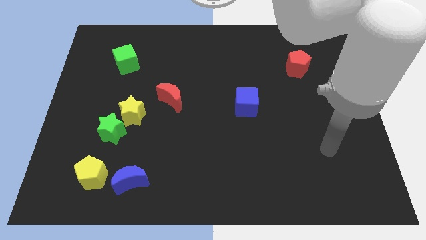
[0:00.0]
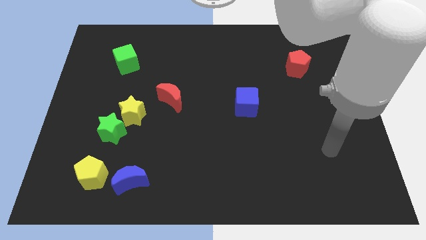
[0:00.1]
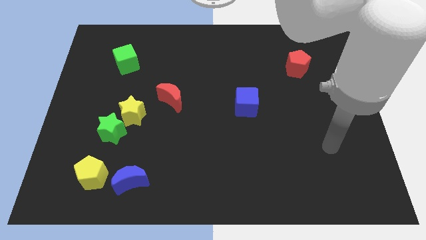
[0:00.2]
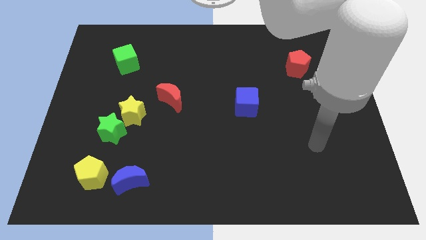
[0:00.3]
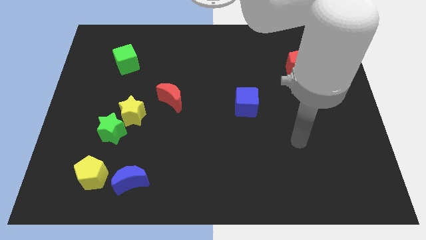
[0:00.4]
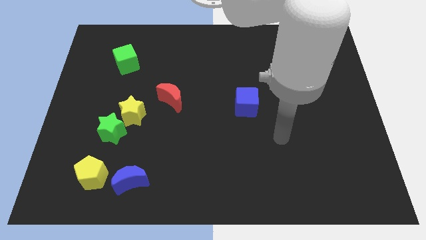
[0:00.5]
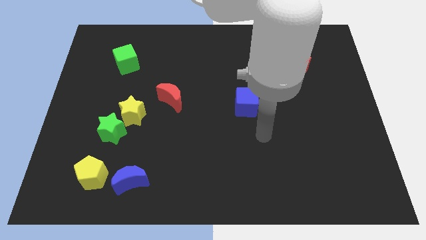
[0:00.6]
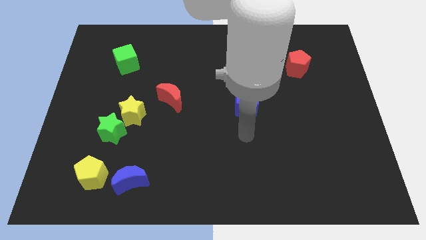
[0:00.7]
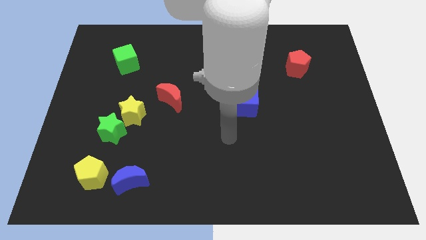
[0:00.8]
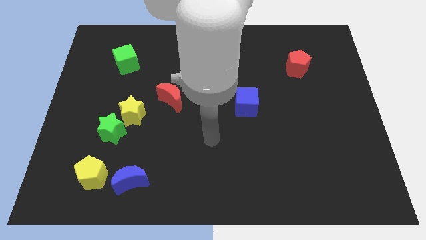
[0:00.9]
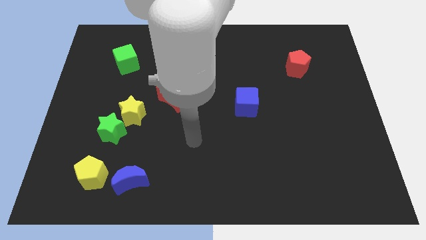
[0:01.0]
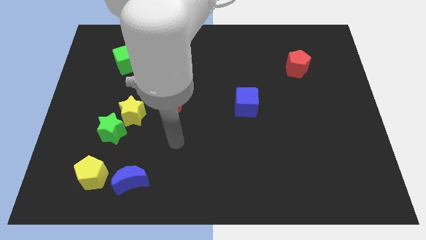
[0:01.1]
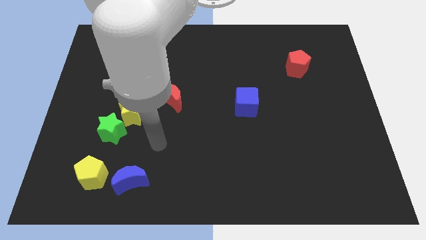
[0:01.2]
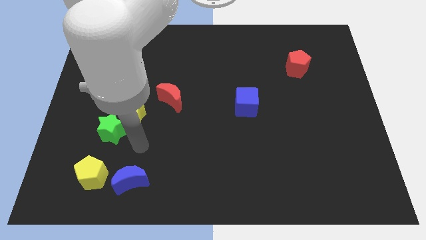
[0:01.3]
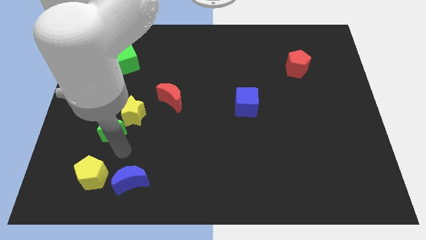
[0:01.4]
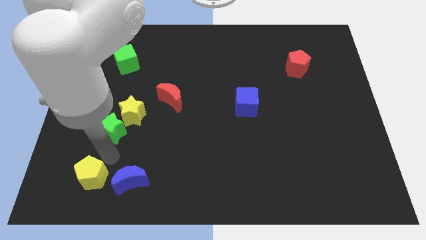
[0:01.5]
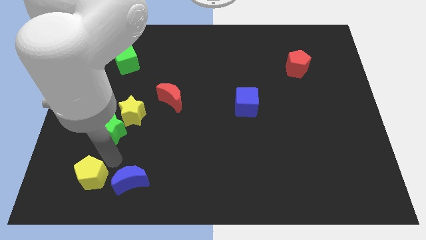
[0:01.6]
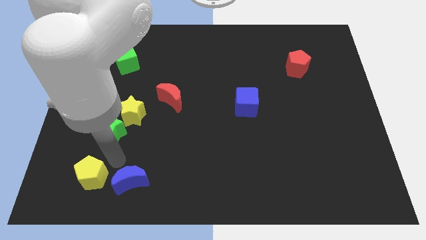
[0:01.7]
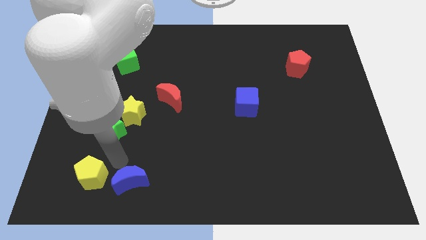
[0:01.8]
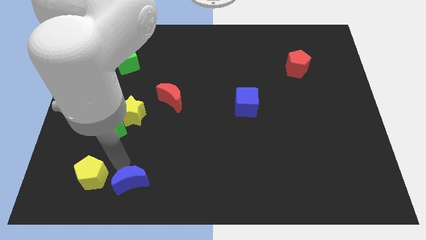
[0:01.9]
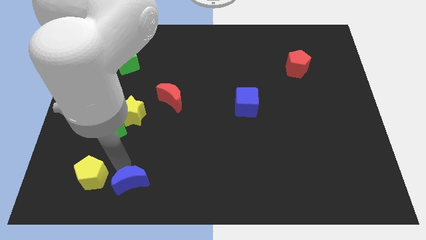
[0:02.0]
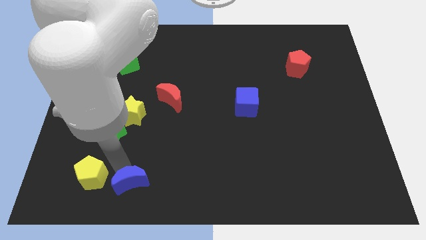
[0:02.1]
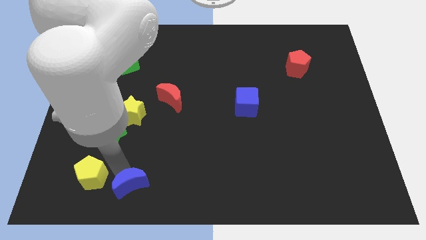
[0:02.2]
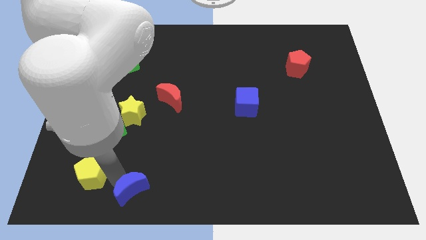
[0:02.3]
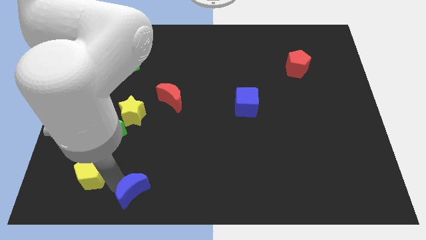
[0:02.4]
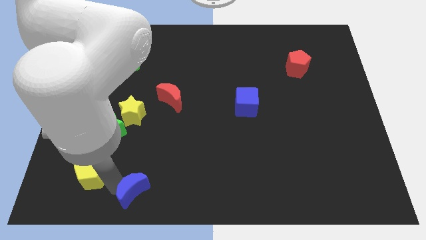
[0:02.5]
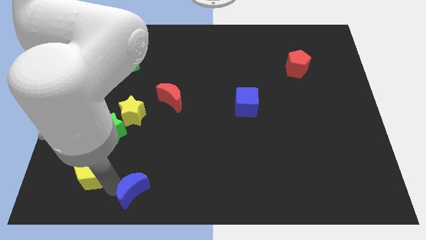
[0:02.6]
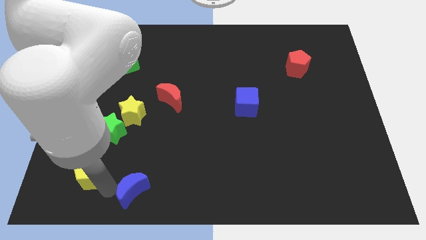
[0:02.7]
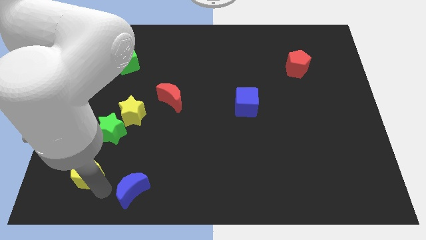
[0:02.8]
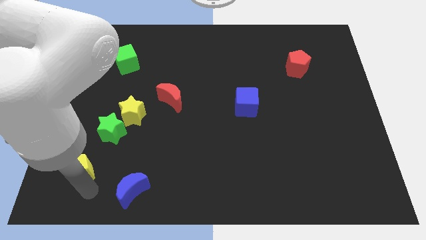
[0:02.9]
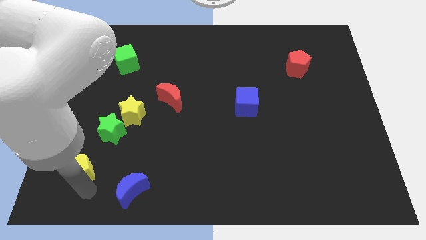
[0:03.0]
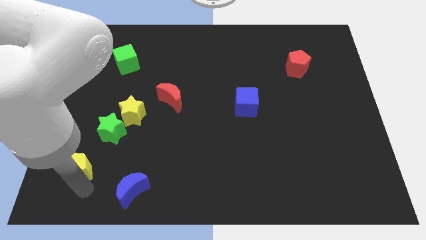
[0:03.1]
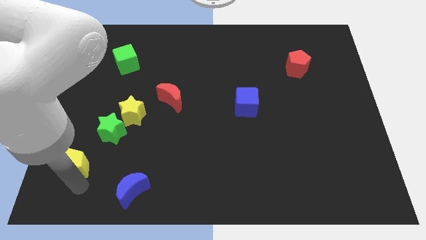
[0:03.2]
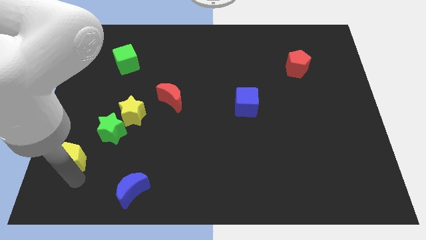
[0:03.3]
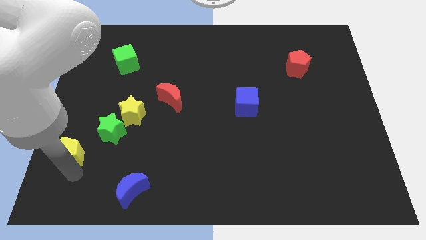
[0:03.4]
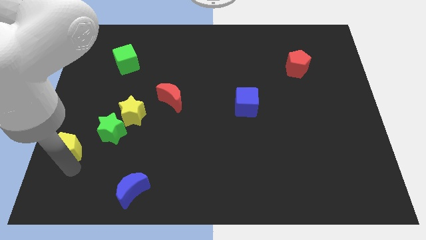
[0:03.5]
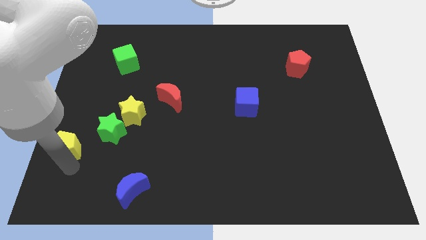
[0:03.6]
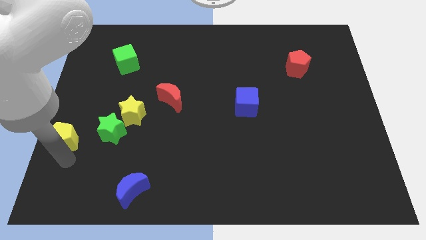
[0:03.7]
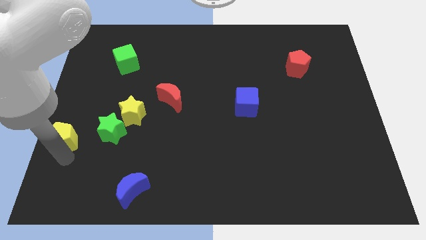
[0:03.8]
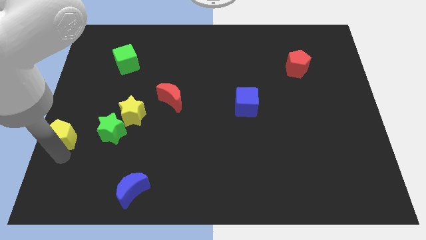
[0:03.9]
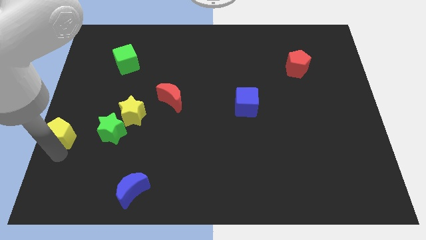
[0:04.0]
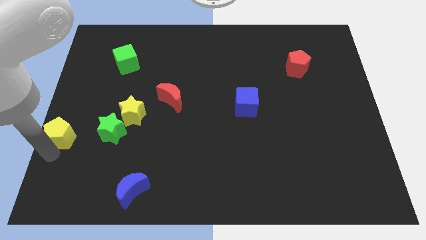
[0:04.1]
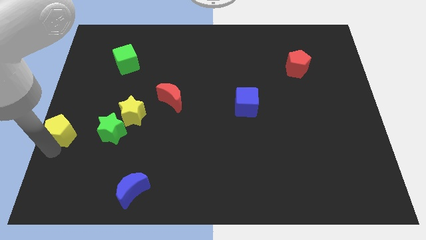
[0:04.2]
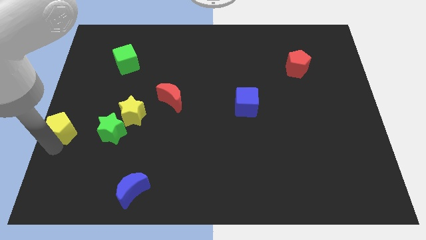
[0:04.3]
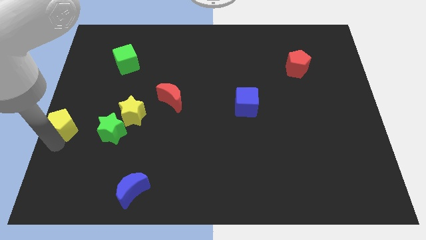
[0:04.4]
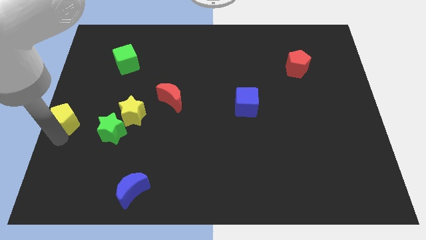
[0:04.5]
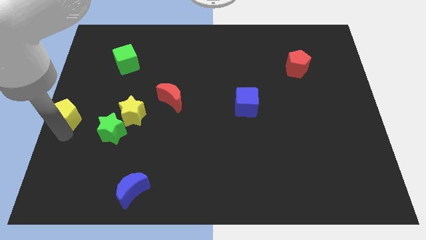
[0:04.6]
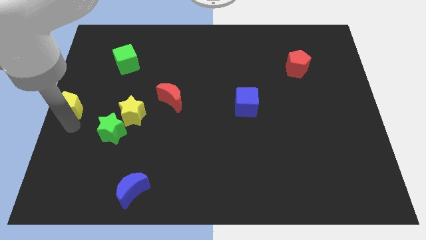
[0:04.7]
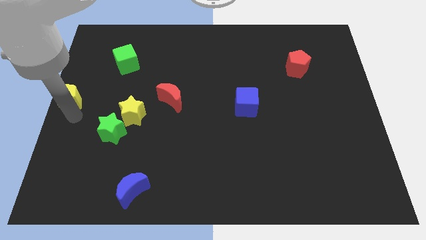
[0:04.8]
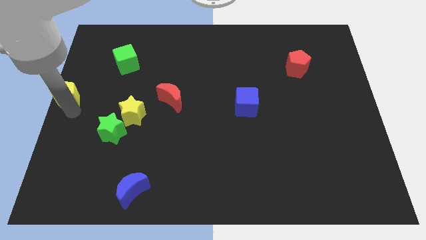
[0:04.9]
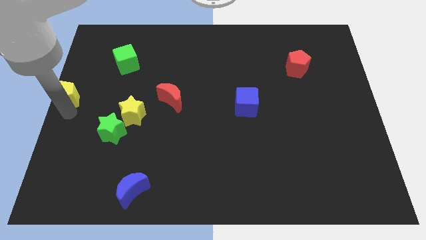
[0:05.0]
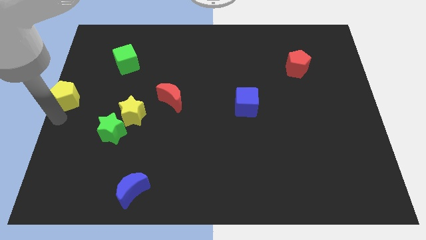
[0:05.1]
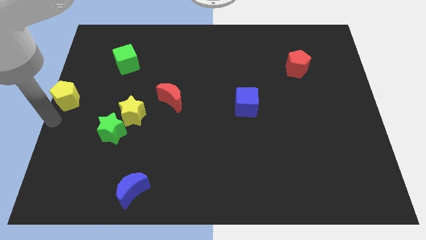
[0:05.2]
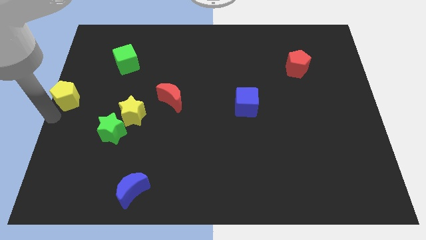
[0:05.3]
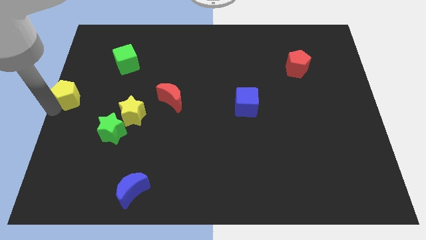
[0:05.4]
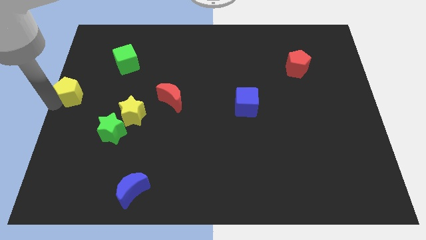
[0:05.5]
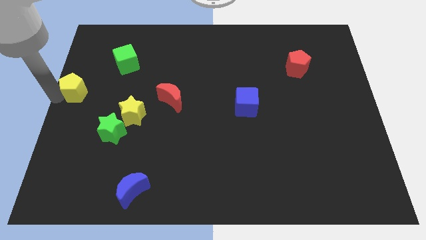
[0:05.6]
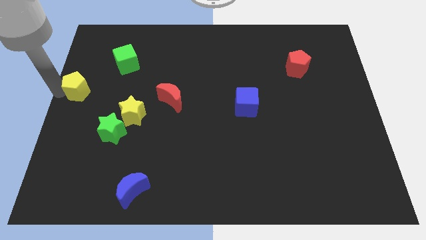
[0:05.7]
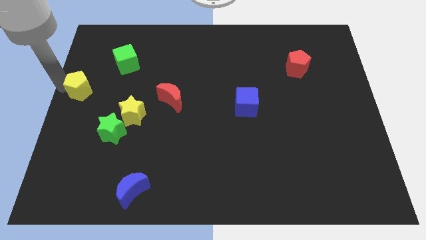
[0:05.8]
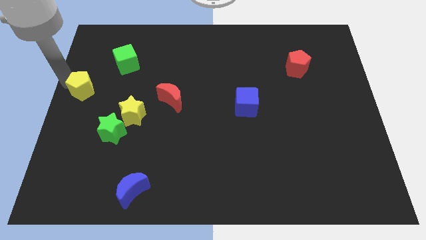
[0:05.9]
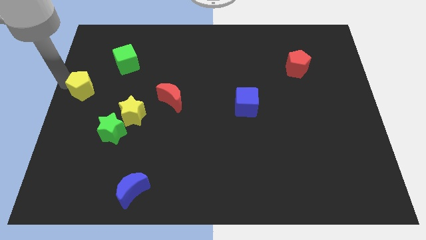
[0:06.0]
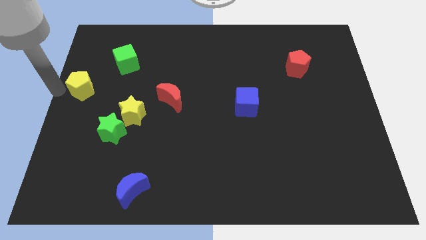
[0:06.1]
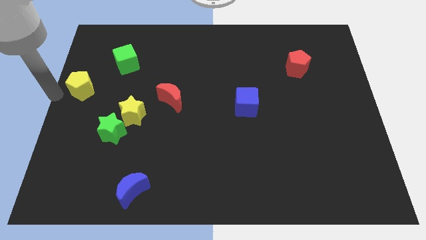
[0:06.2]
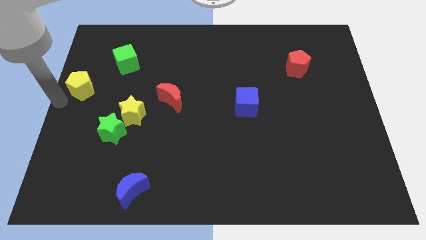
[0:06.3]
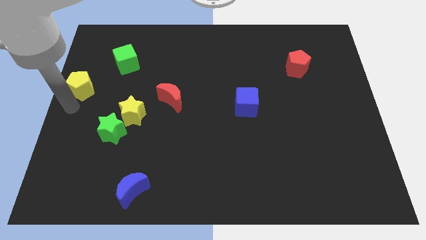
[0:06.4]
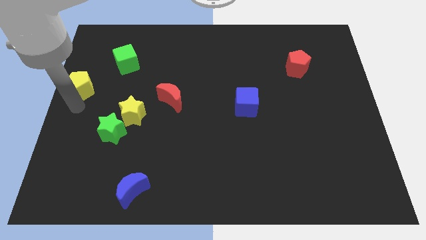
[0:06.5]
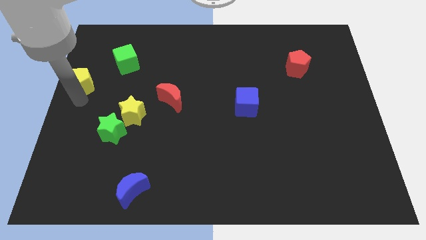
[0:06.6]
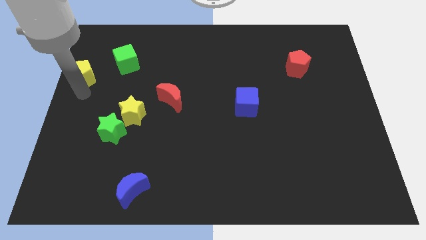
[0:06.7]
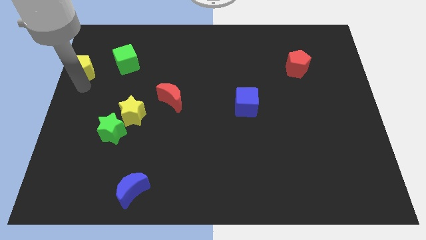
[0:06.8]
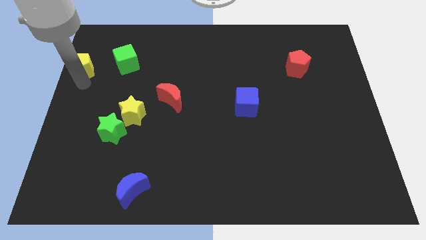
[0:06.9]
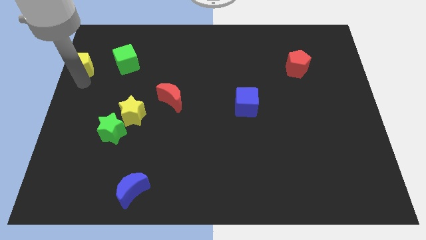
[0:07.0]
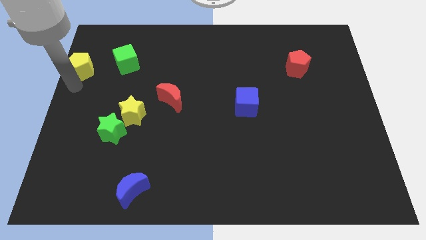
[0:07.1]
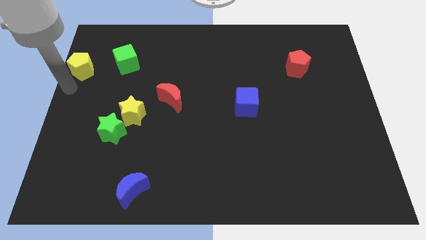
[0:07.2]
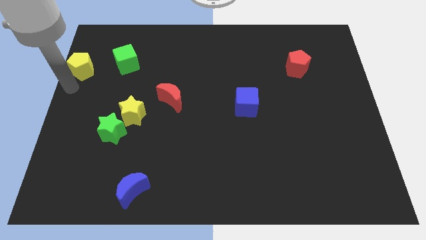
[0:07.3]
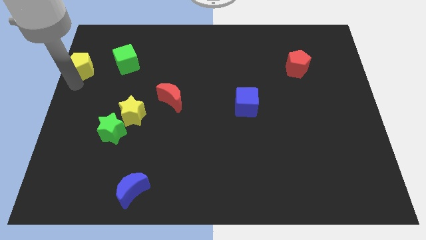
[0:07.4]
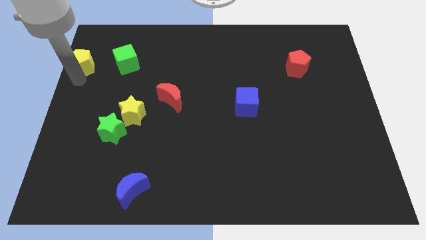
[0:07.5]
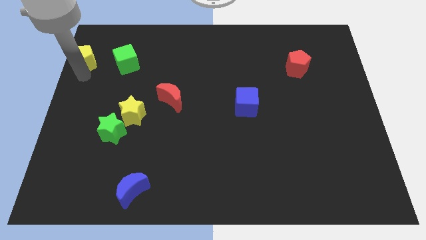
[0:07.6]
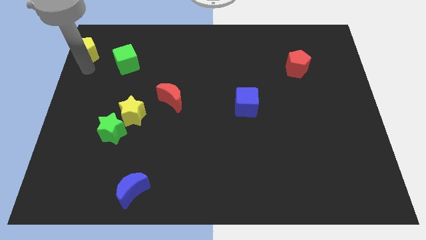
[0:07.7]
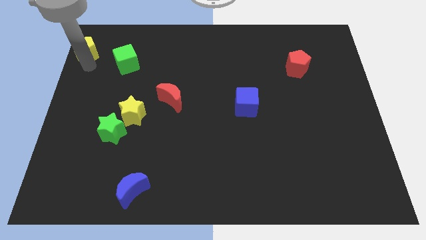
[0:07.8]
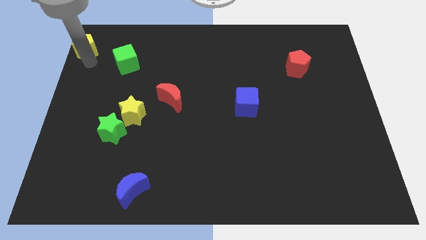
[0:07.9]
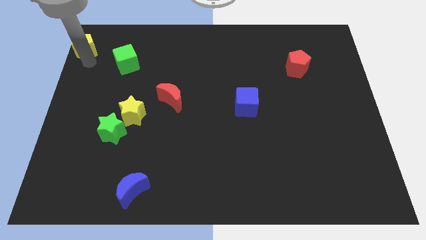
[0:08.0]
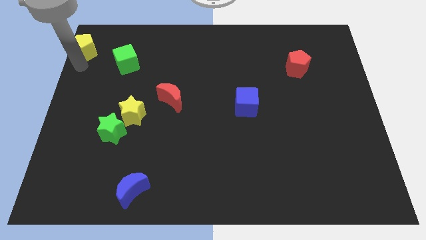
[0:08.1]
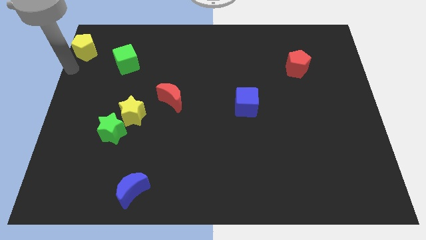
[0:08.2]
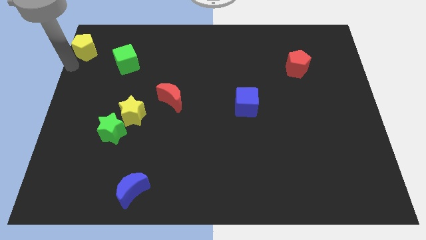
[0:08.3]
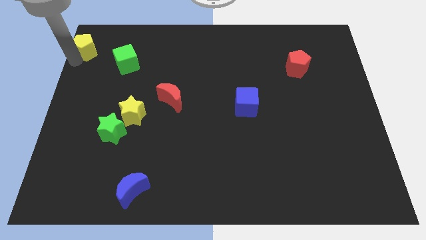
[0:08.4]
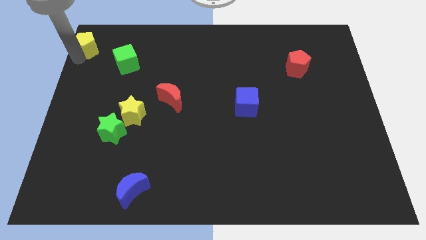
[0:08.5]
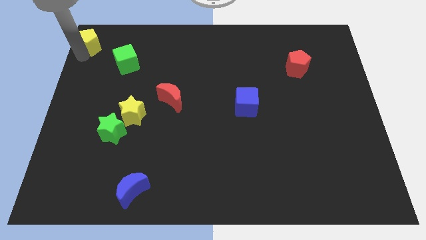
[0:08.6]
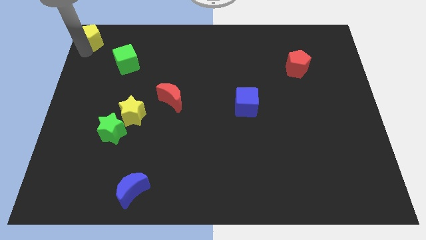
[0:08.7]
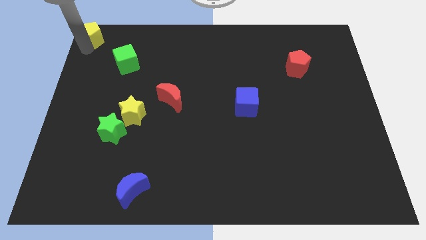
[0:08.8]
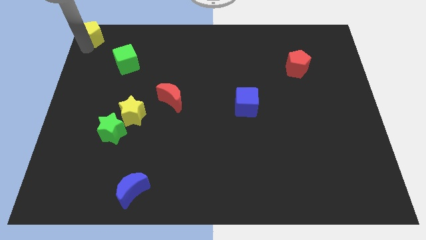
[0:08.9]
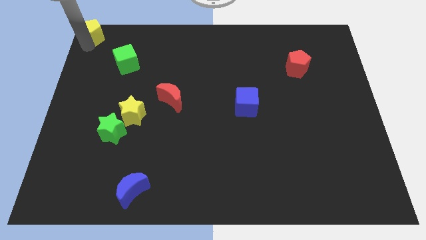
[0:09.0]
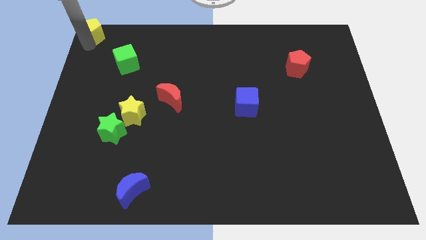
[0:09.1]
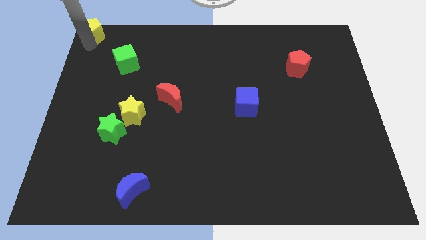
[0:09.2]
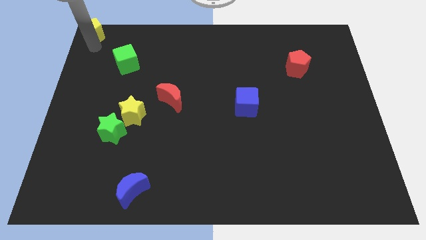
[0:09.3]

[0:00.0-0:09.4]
place yellow pentagon on the top left corner of the board
